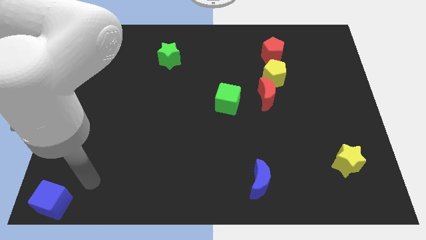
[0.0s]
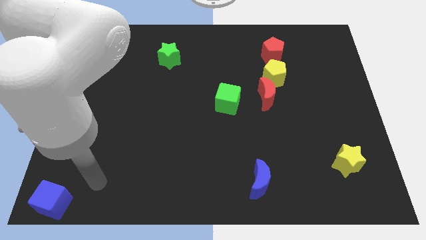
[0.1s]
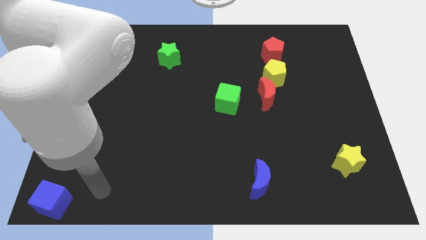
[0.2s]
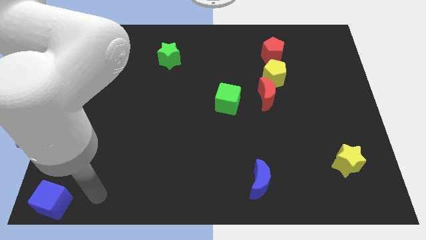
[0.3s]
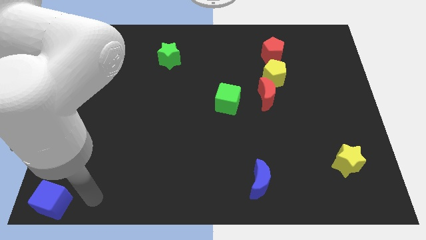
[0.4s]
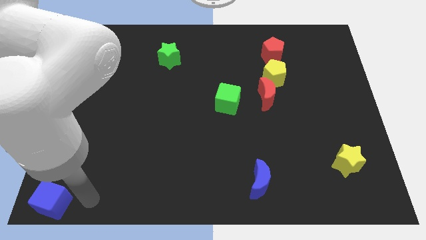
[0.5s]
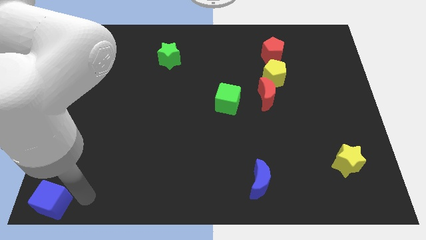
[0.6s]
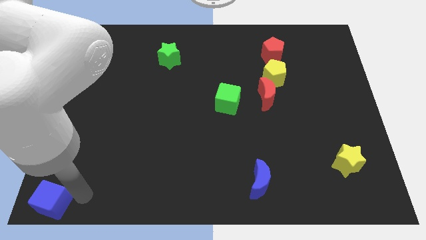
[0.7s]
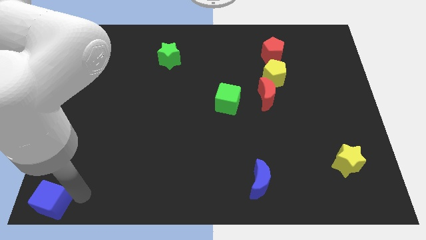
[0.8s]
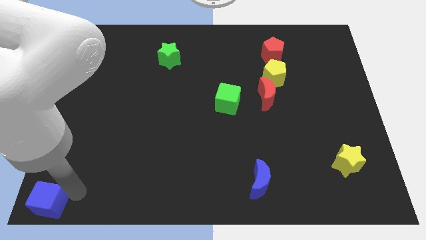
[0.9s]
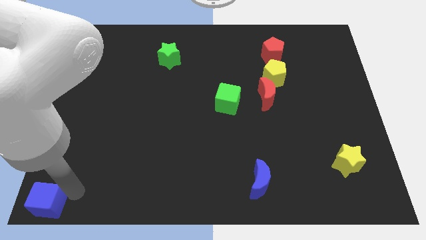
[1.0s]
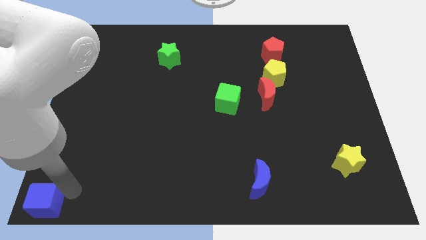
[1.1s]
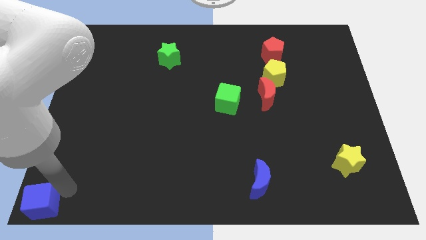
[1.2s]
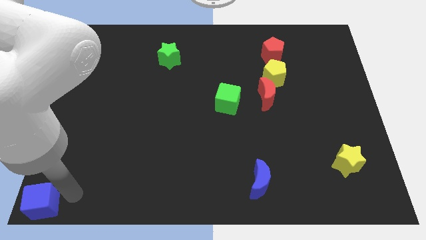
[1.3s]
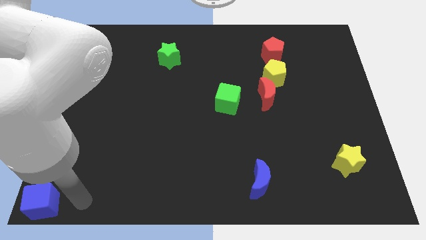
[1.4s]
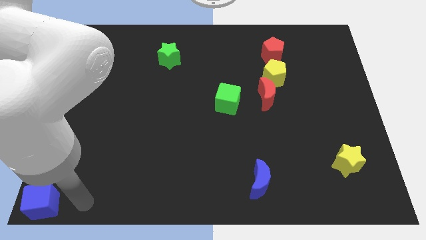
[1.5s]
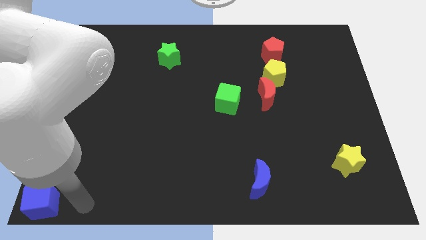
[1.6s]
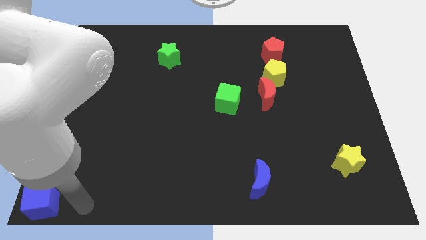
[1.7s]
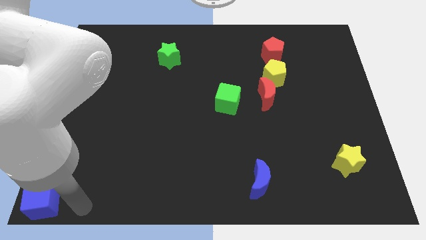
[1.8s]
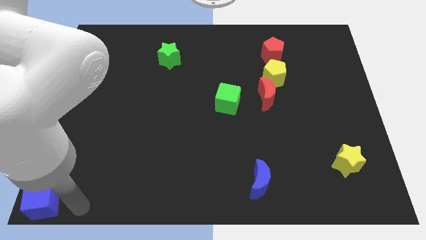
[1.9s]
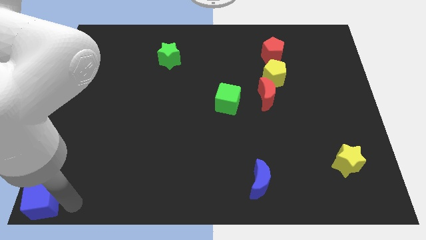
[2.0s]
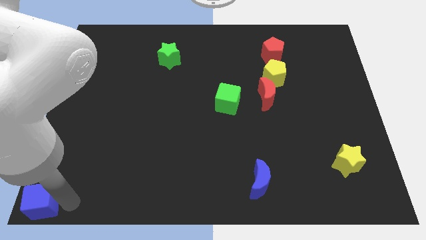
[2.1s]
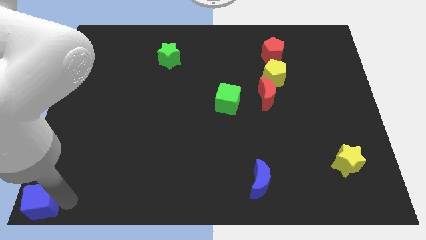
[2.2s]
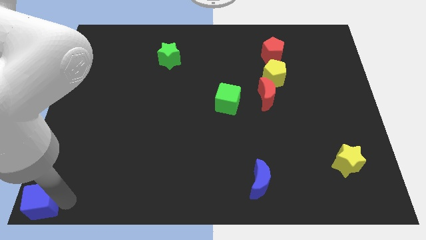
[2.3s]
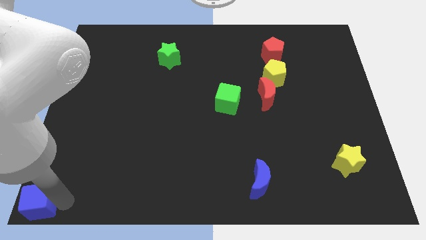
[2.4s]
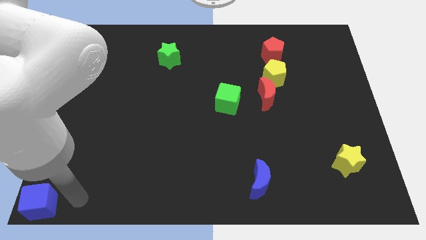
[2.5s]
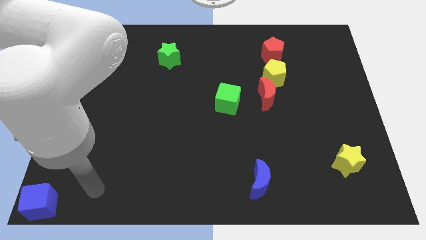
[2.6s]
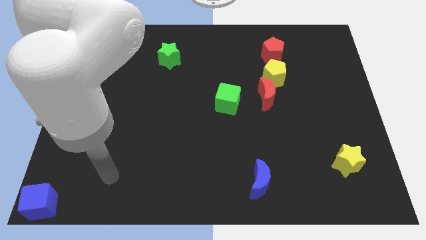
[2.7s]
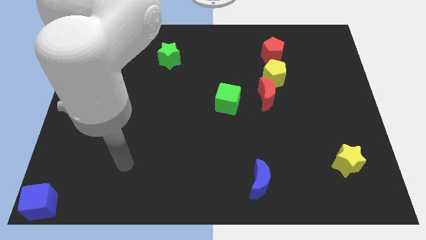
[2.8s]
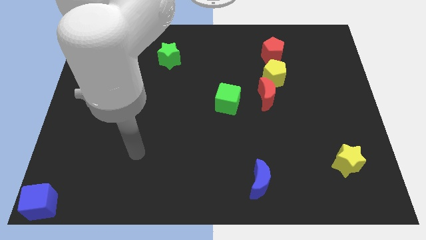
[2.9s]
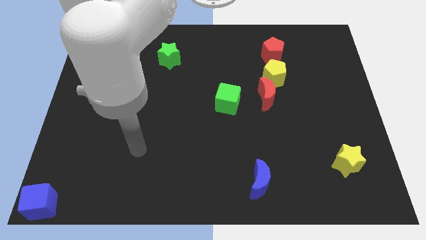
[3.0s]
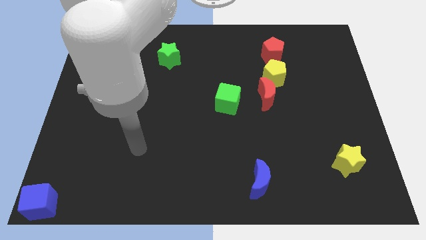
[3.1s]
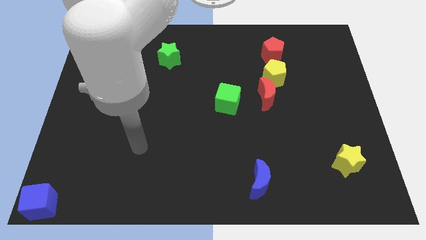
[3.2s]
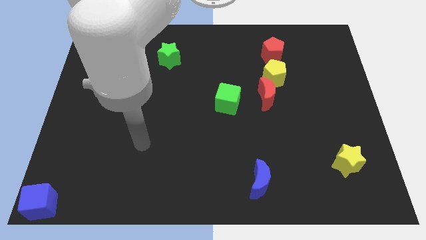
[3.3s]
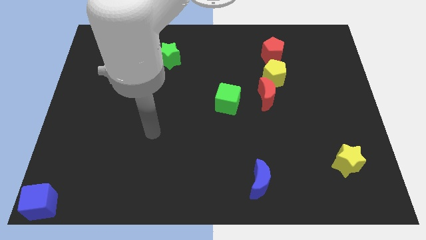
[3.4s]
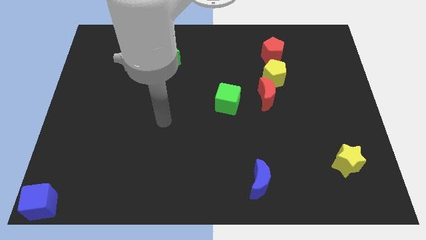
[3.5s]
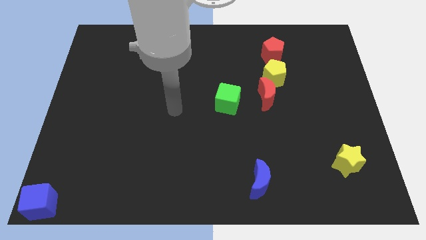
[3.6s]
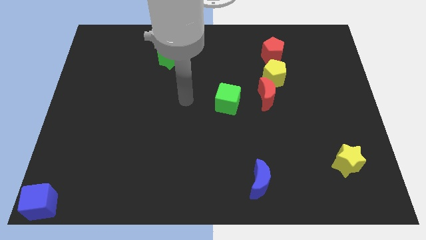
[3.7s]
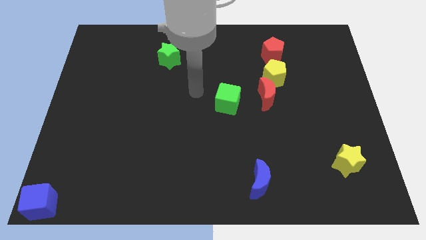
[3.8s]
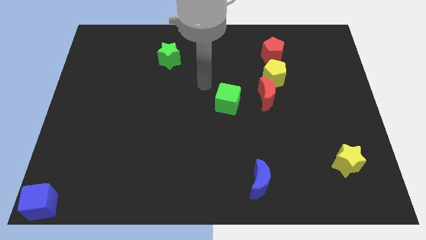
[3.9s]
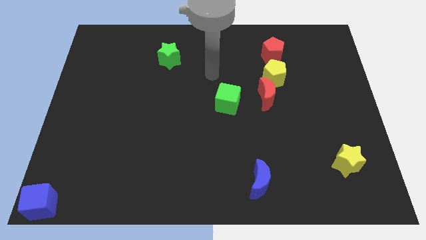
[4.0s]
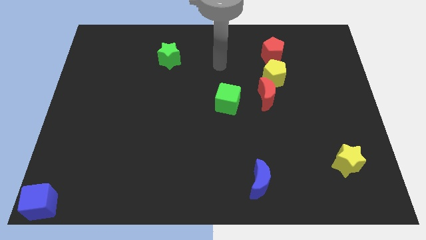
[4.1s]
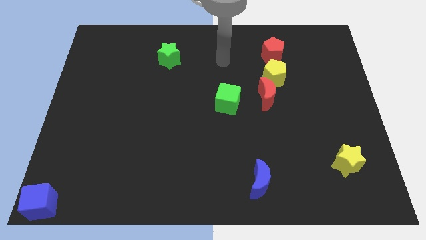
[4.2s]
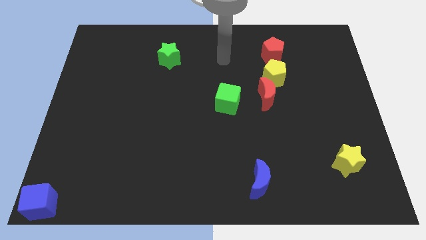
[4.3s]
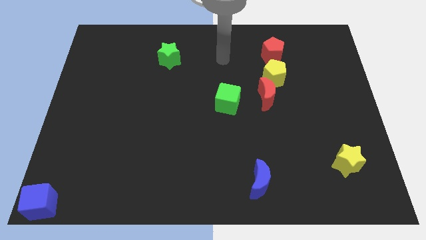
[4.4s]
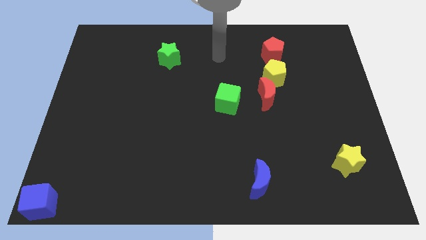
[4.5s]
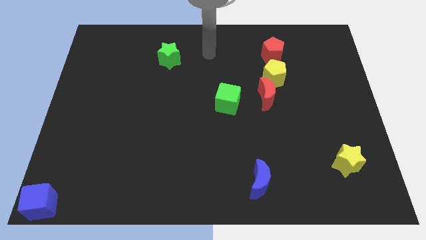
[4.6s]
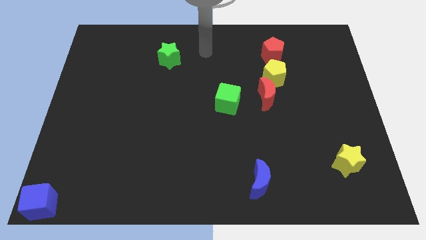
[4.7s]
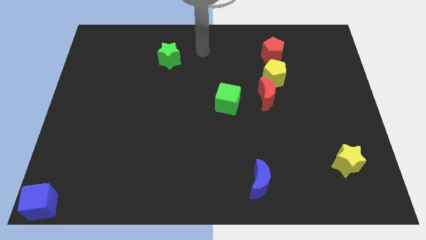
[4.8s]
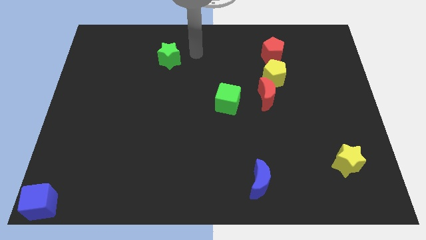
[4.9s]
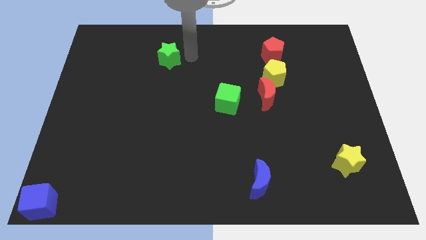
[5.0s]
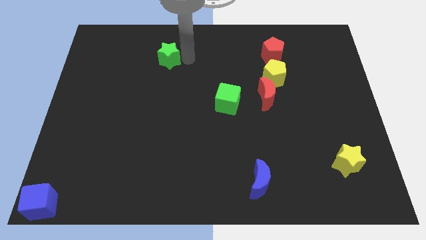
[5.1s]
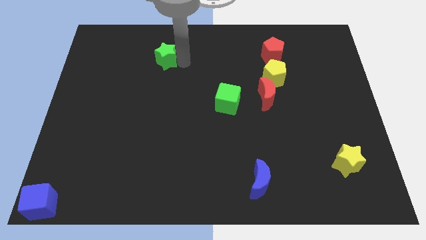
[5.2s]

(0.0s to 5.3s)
tap the right side of the green star

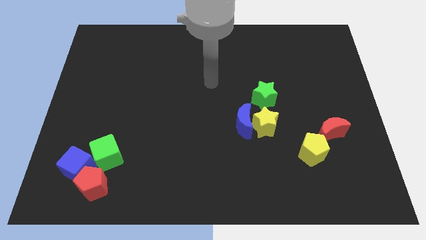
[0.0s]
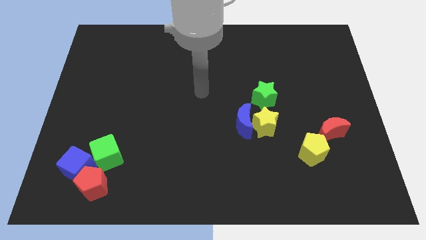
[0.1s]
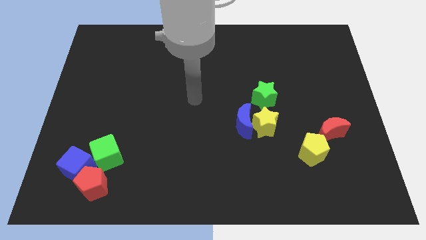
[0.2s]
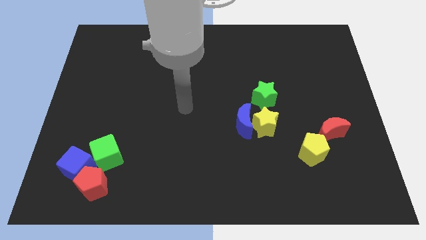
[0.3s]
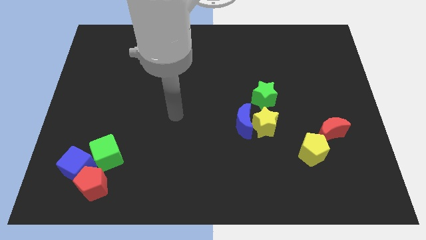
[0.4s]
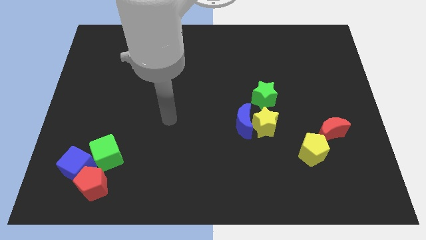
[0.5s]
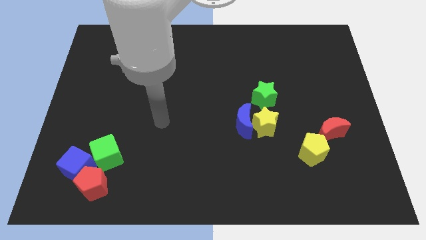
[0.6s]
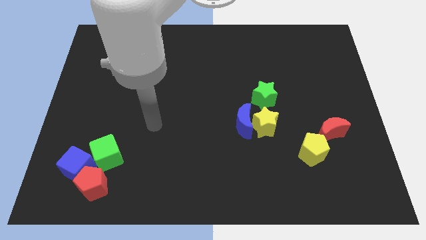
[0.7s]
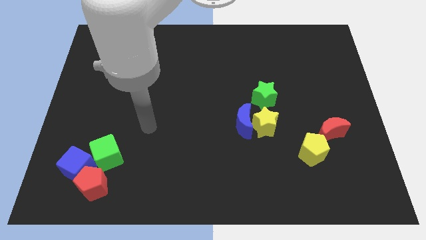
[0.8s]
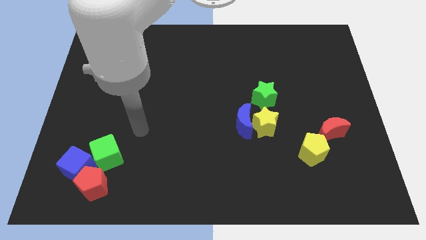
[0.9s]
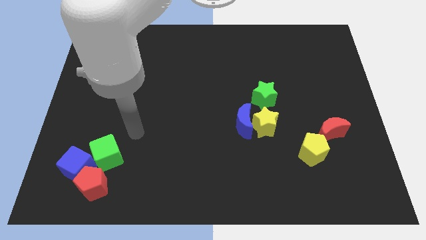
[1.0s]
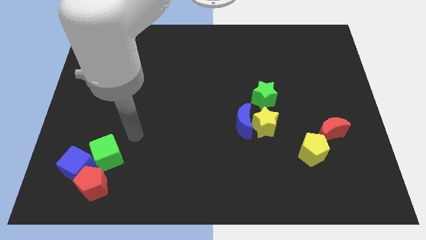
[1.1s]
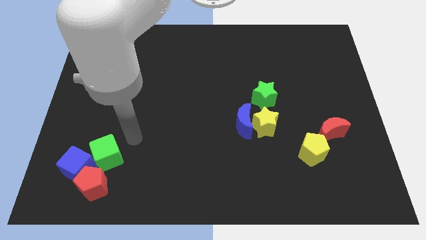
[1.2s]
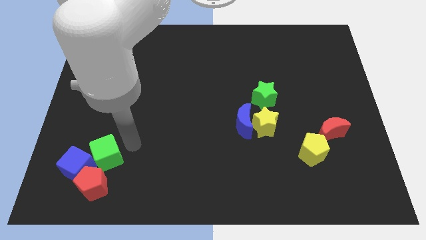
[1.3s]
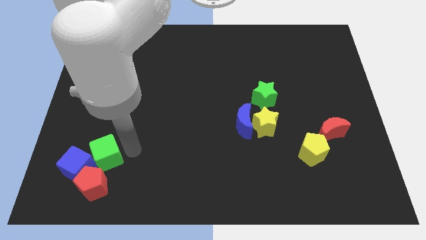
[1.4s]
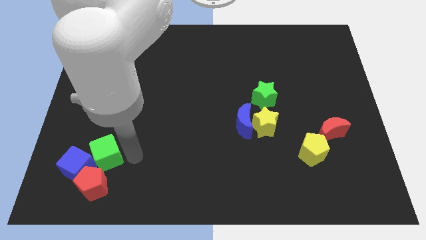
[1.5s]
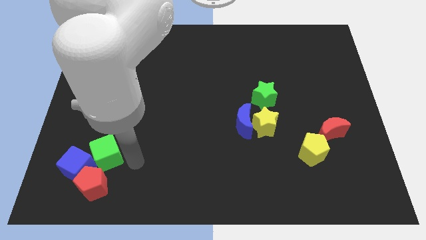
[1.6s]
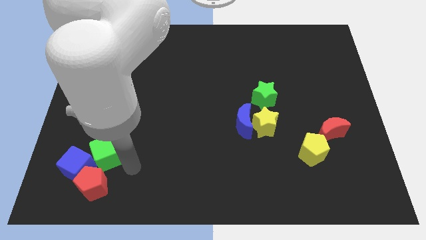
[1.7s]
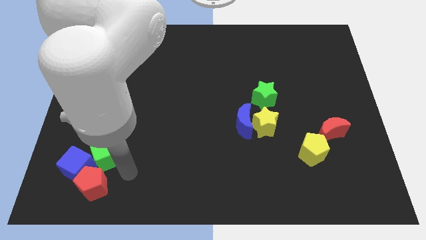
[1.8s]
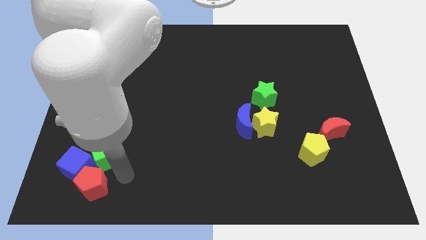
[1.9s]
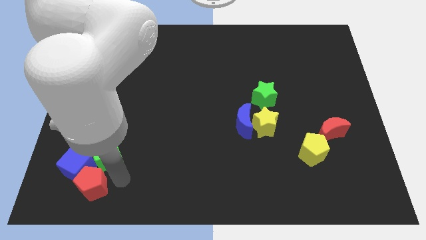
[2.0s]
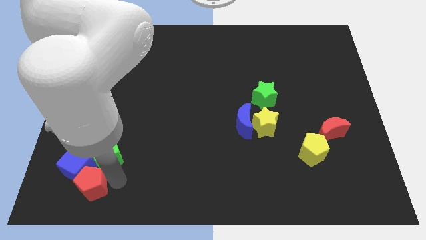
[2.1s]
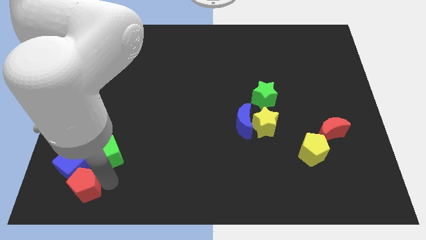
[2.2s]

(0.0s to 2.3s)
move the arm to the bottom left red pentagon

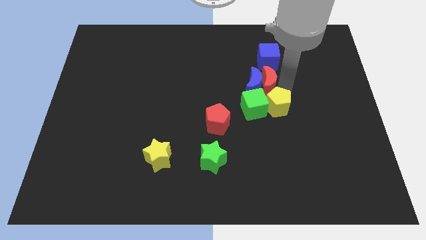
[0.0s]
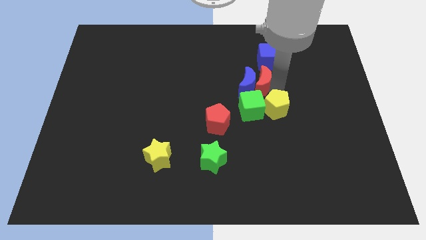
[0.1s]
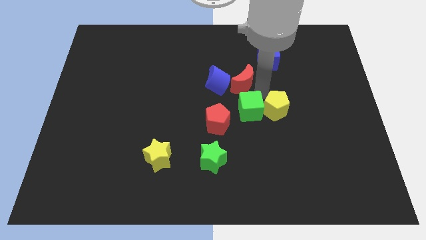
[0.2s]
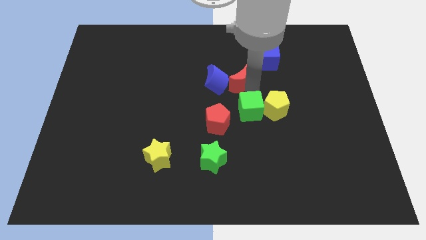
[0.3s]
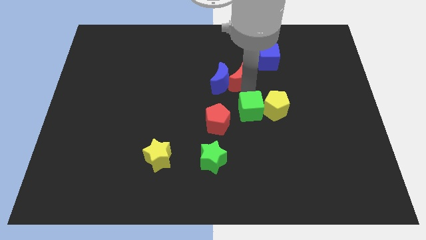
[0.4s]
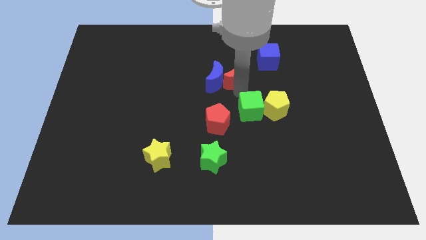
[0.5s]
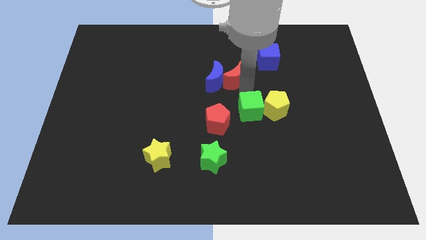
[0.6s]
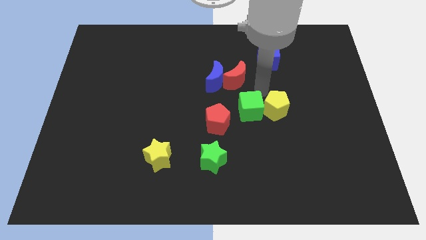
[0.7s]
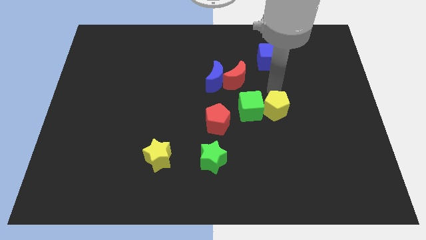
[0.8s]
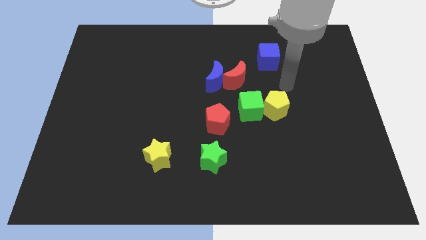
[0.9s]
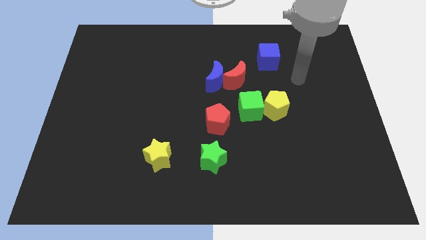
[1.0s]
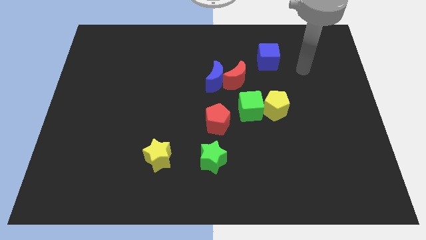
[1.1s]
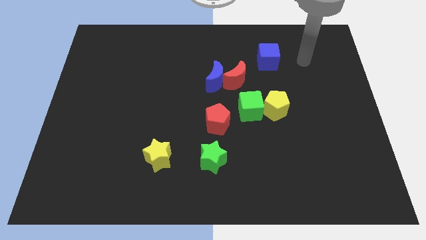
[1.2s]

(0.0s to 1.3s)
move red moon along with the blue moon towards the top left
